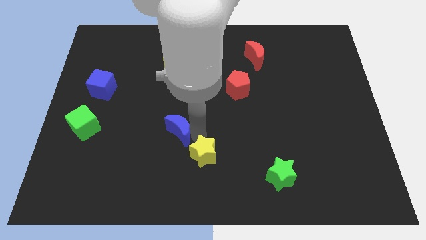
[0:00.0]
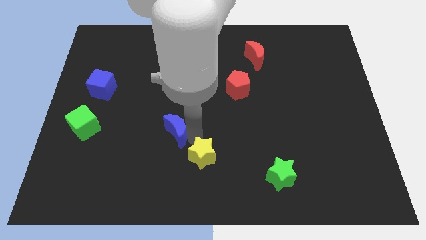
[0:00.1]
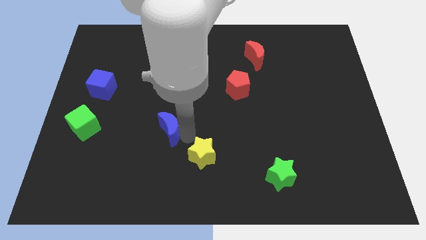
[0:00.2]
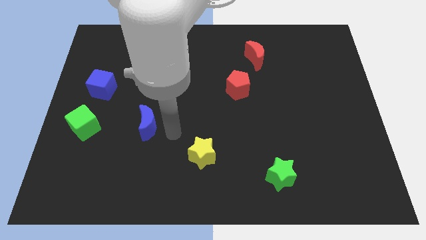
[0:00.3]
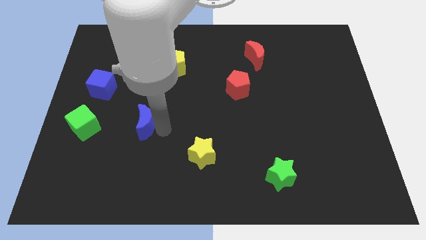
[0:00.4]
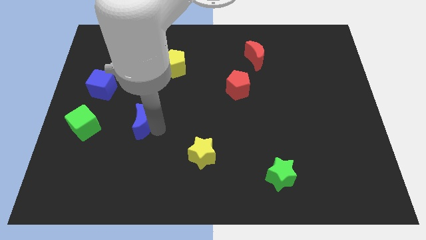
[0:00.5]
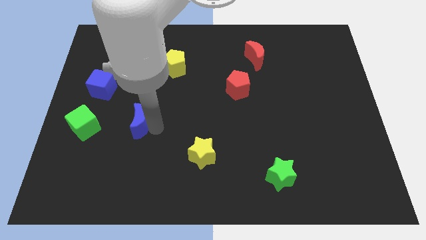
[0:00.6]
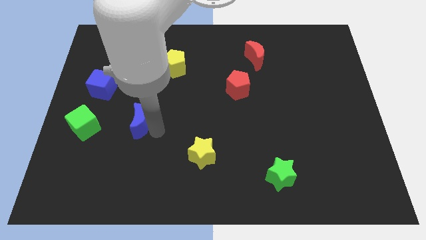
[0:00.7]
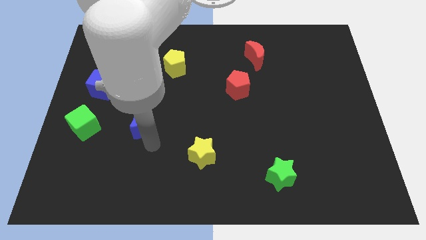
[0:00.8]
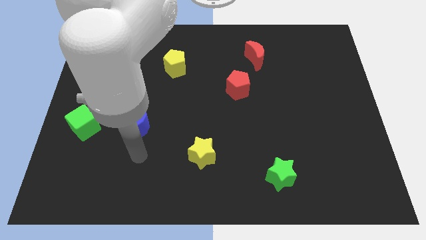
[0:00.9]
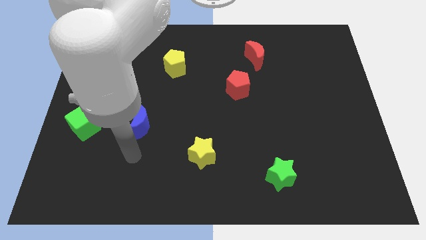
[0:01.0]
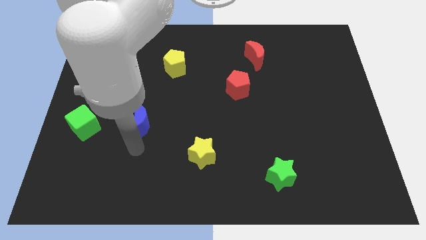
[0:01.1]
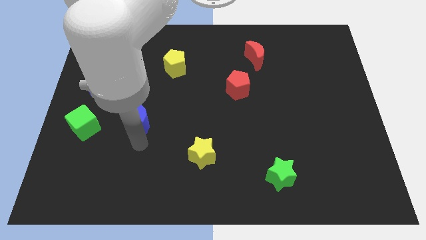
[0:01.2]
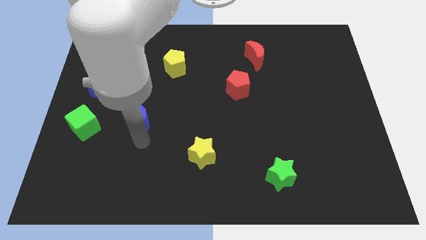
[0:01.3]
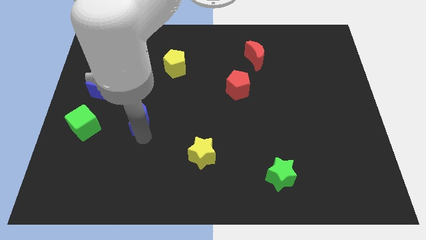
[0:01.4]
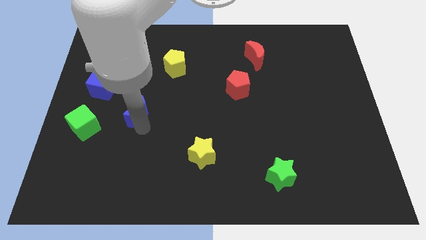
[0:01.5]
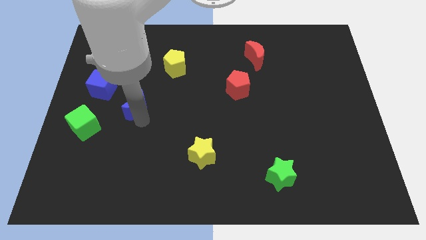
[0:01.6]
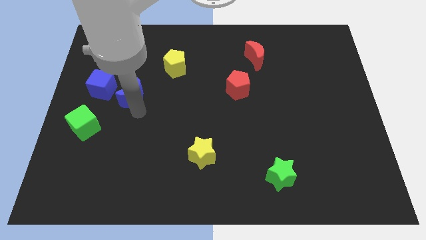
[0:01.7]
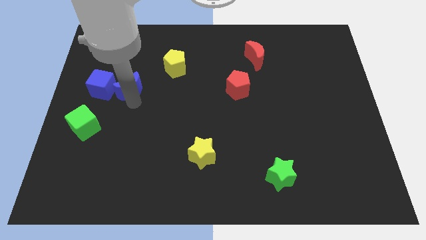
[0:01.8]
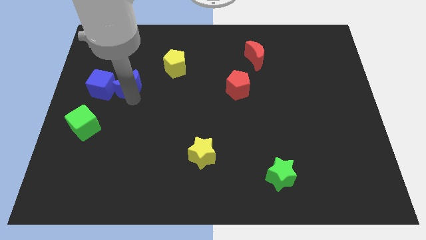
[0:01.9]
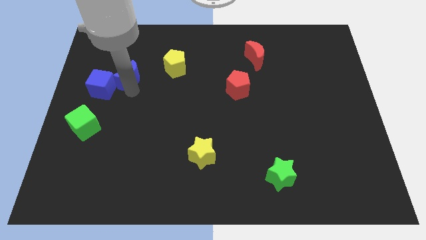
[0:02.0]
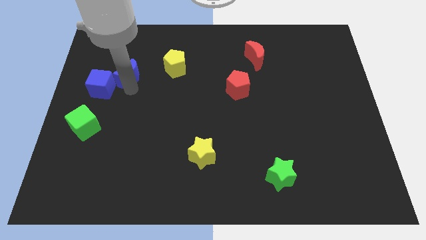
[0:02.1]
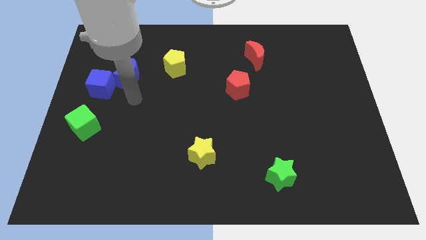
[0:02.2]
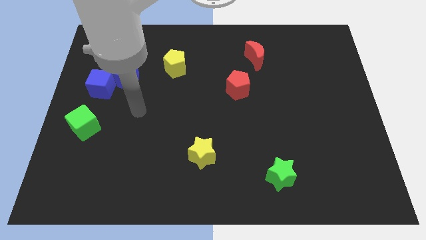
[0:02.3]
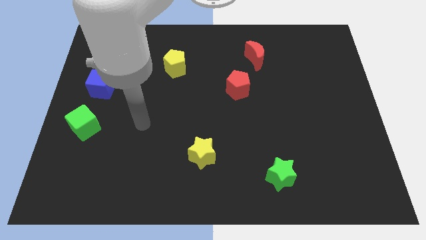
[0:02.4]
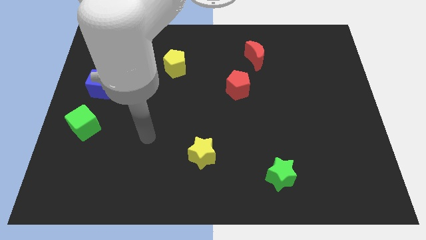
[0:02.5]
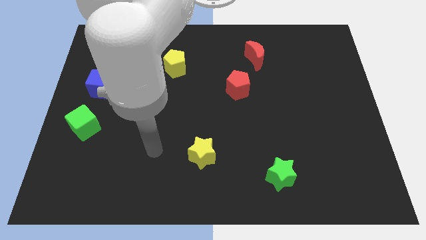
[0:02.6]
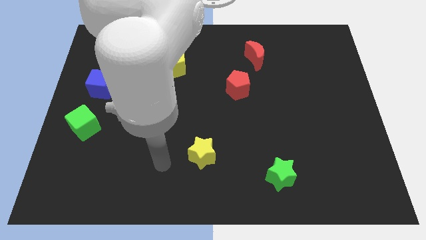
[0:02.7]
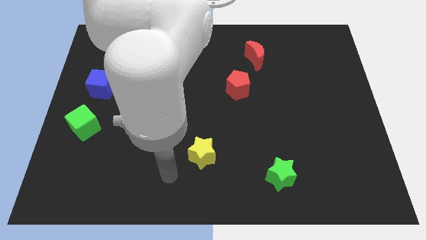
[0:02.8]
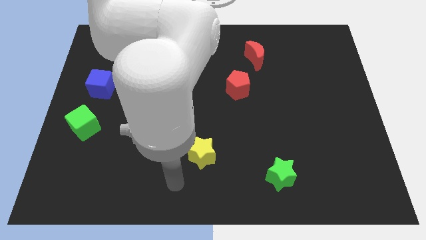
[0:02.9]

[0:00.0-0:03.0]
make the blue crescent to touch the blue cube

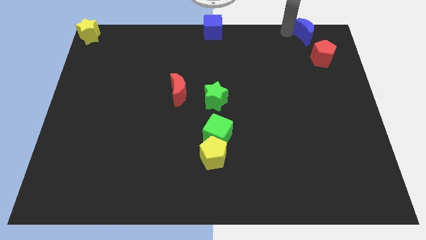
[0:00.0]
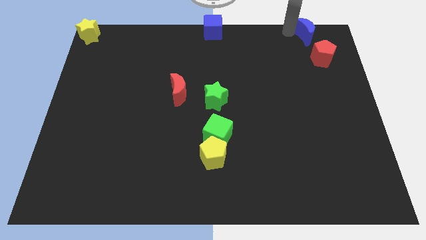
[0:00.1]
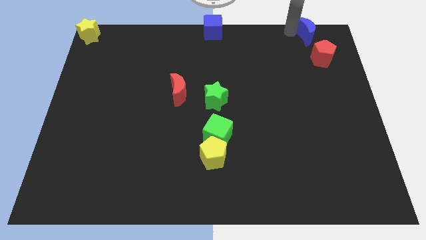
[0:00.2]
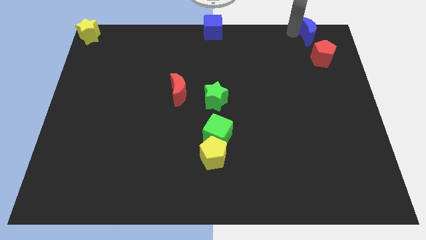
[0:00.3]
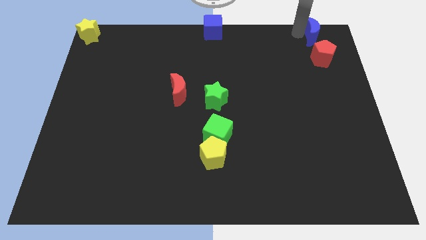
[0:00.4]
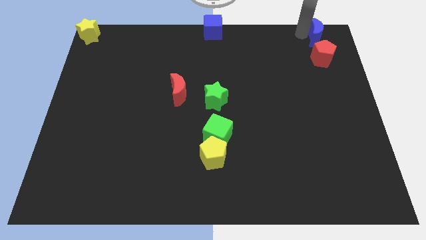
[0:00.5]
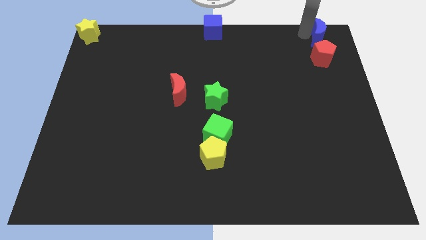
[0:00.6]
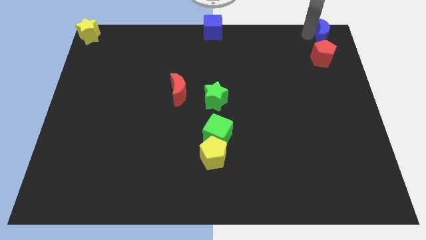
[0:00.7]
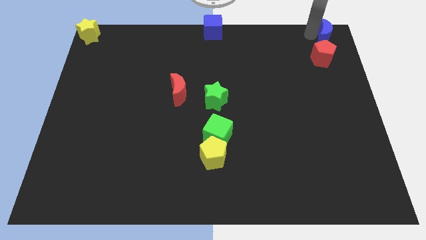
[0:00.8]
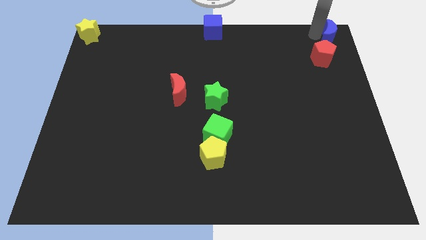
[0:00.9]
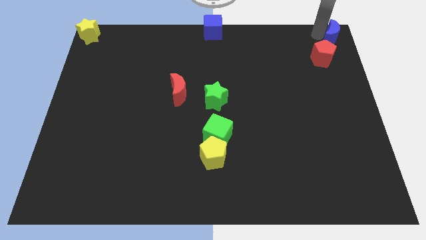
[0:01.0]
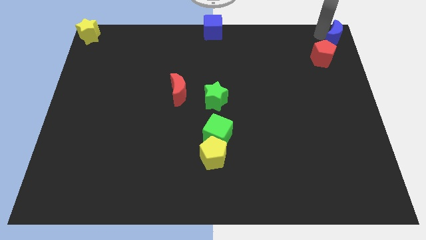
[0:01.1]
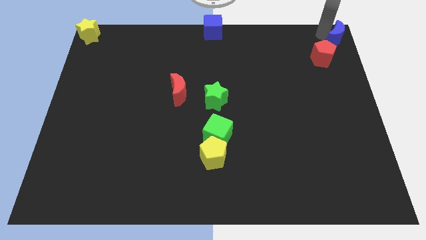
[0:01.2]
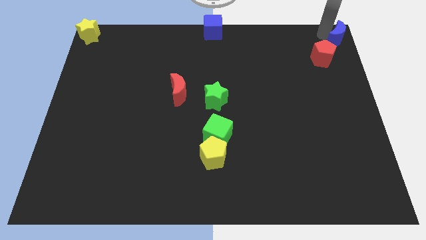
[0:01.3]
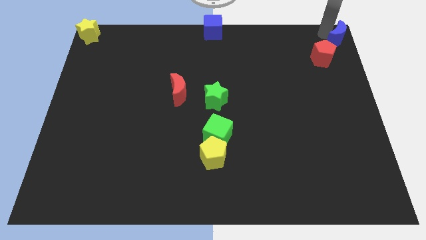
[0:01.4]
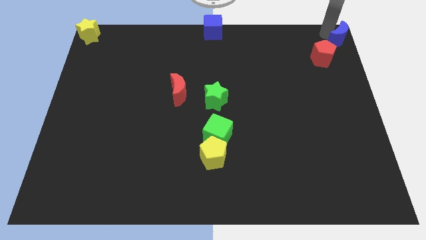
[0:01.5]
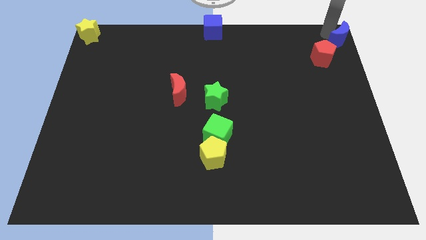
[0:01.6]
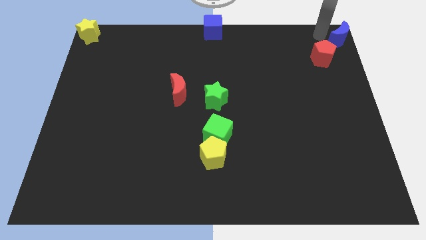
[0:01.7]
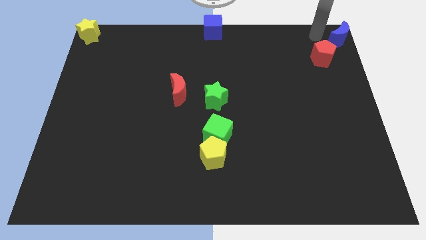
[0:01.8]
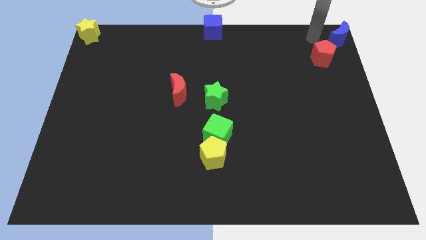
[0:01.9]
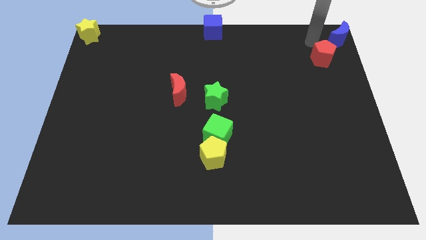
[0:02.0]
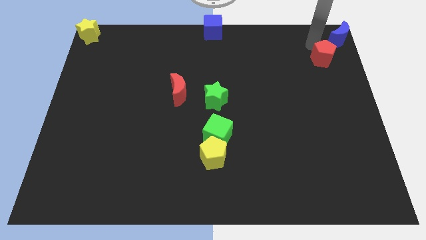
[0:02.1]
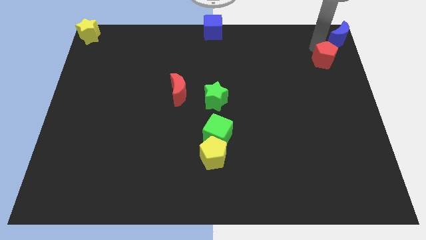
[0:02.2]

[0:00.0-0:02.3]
place the blue moon diagonally to the red pentagon

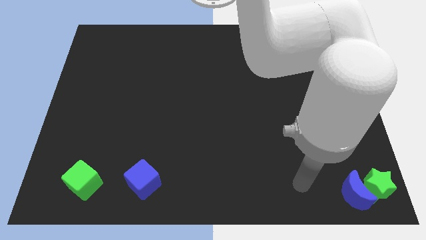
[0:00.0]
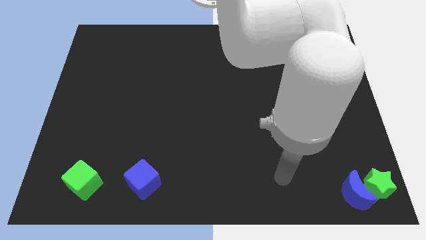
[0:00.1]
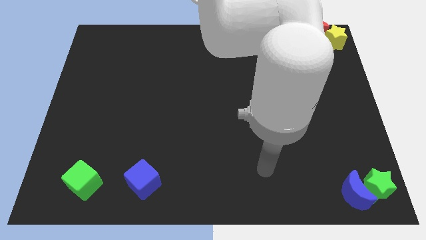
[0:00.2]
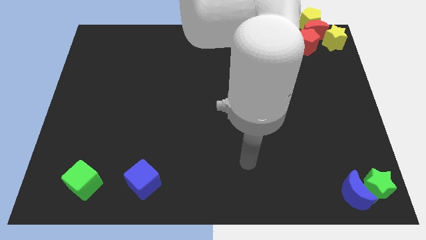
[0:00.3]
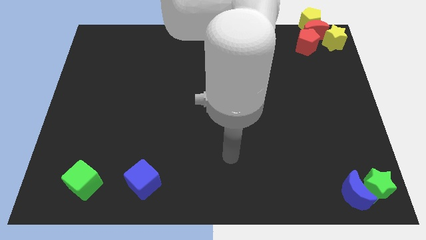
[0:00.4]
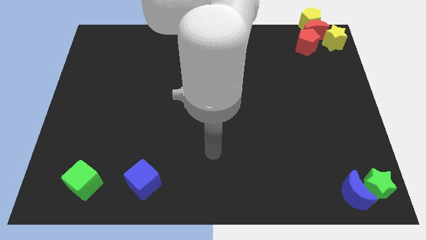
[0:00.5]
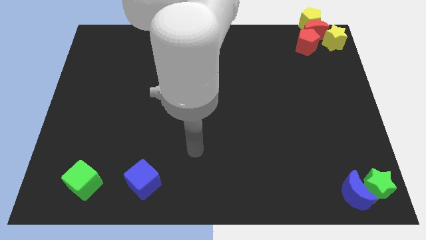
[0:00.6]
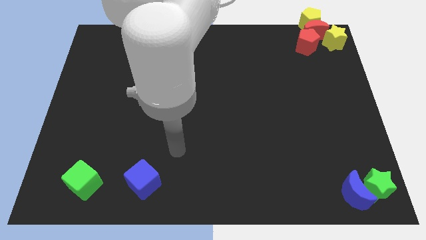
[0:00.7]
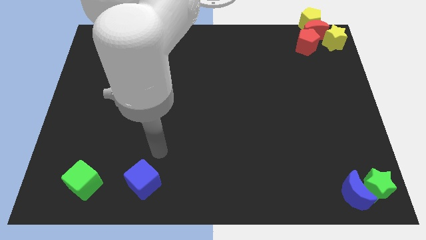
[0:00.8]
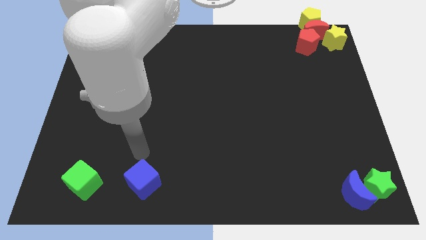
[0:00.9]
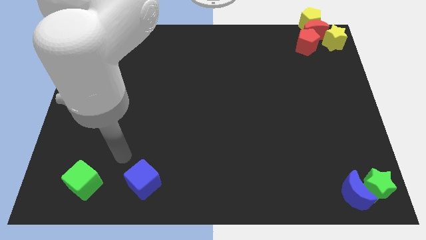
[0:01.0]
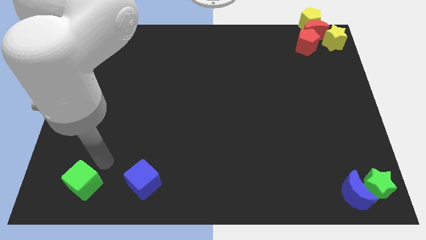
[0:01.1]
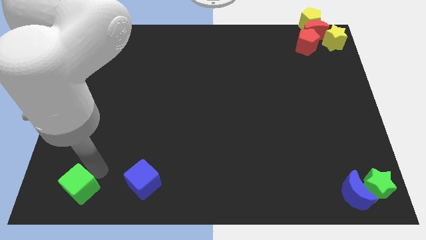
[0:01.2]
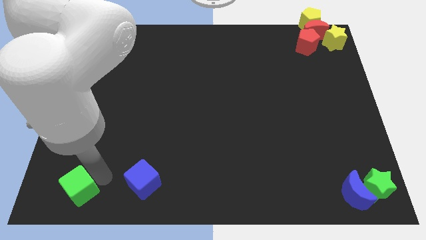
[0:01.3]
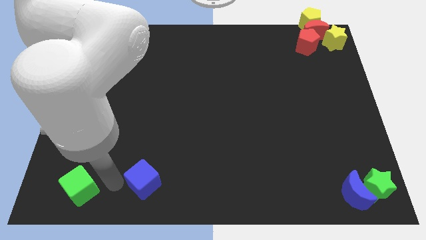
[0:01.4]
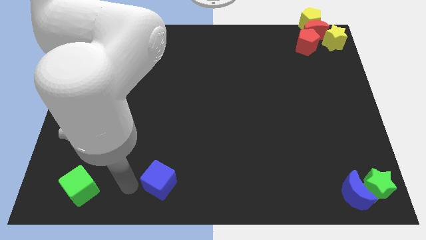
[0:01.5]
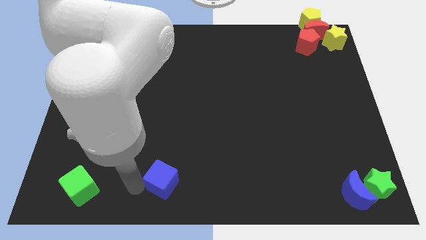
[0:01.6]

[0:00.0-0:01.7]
place your arm at the left side of the blue cube

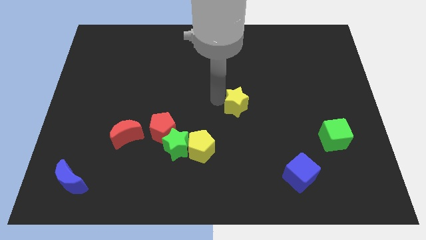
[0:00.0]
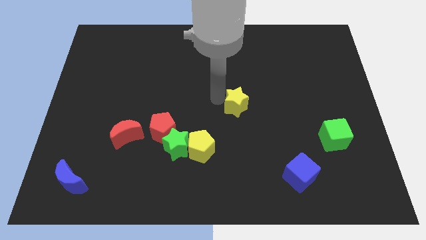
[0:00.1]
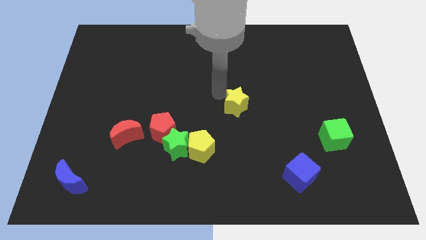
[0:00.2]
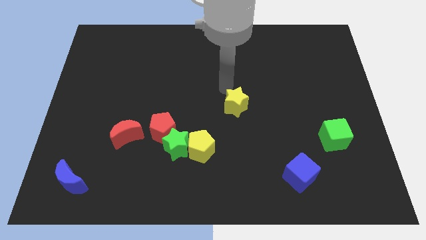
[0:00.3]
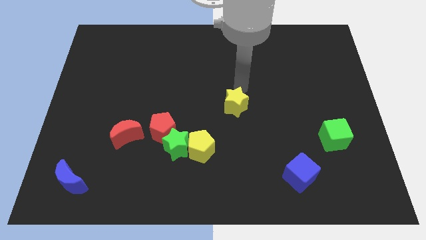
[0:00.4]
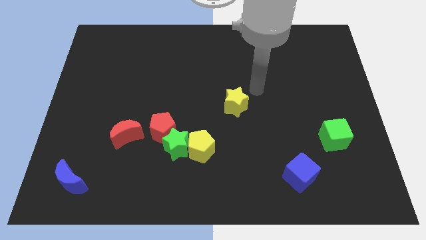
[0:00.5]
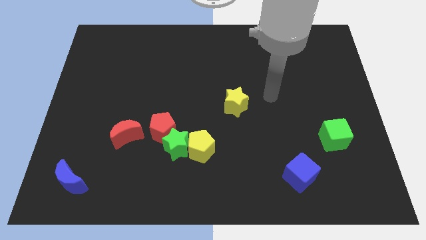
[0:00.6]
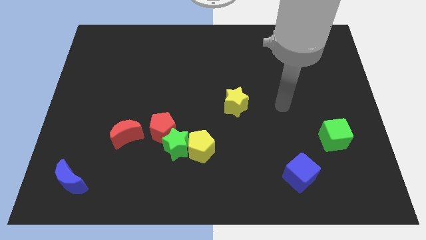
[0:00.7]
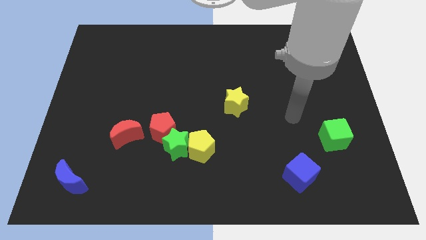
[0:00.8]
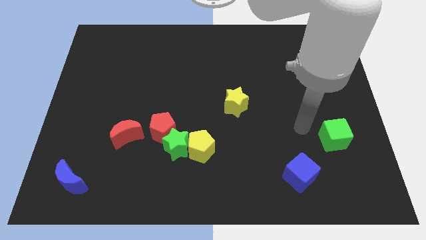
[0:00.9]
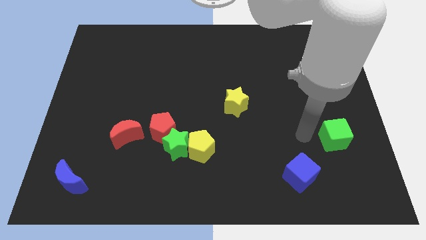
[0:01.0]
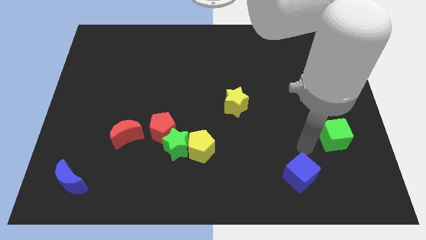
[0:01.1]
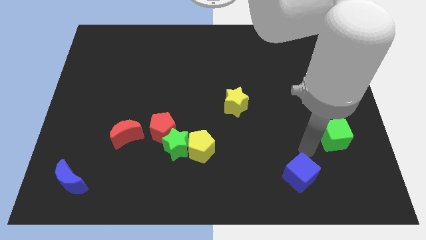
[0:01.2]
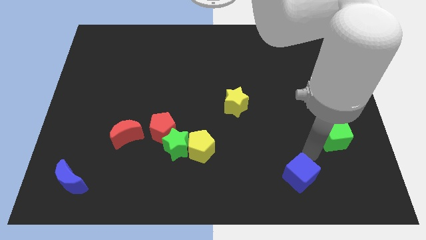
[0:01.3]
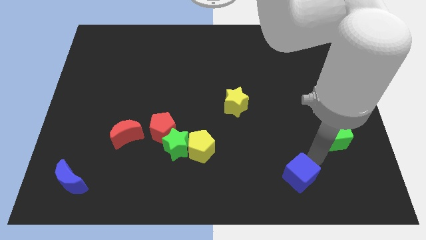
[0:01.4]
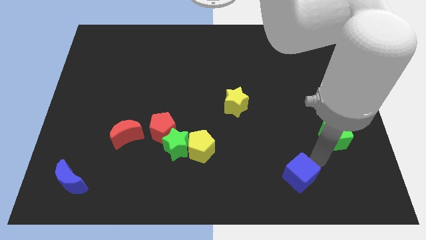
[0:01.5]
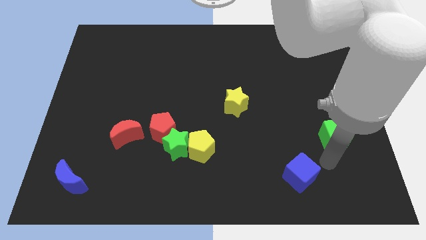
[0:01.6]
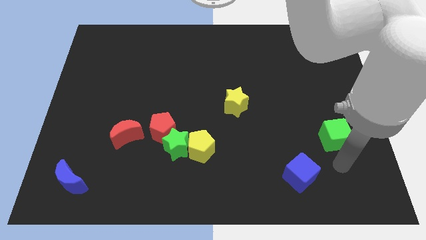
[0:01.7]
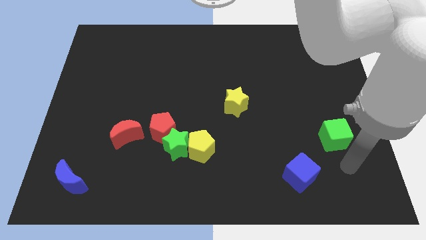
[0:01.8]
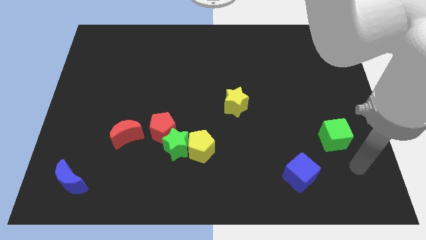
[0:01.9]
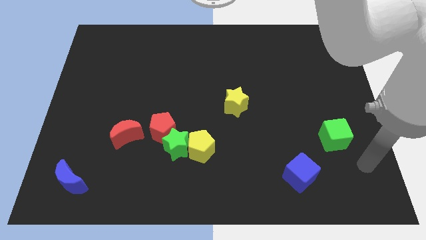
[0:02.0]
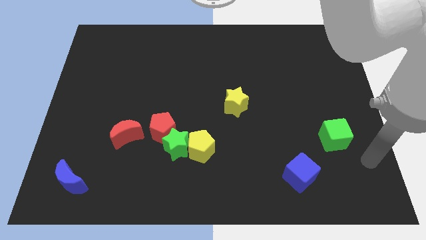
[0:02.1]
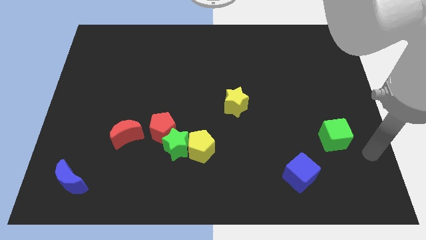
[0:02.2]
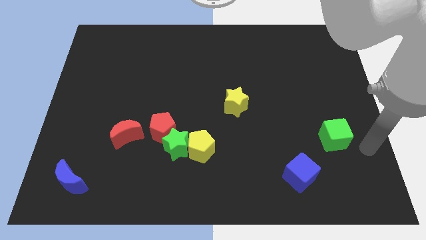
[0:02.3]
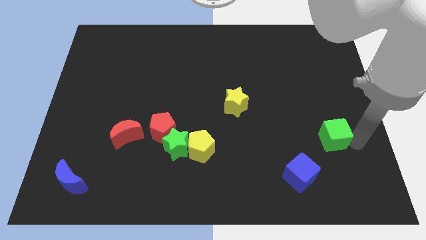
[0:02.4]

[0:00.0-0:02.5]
place the arm right to the green cube
